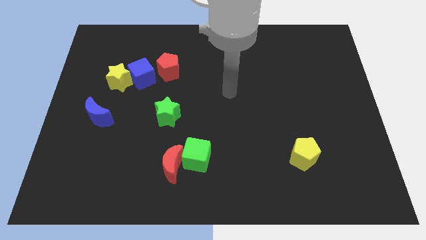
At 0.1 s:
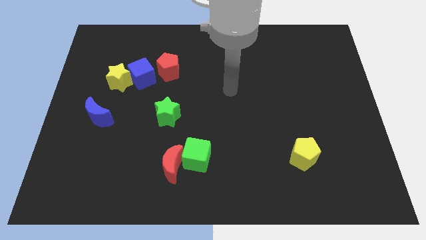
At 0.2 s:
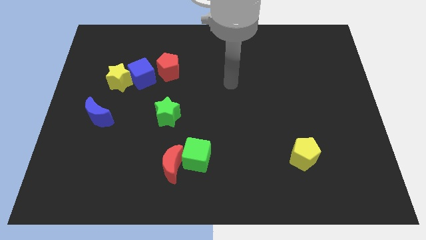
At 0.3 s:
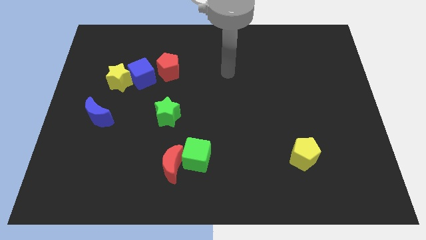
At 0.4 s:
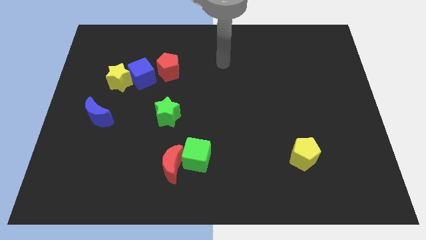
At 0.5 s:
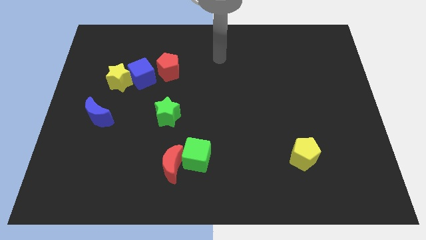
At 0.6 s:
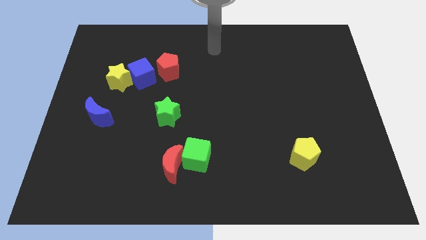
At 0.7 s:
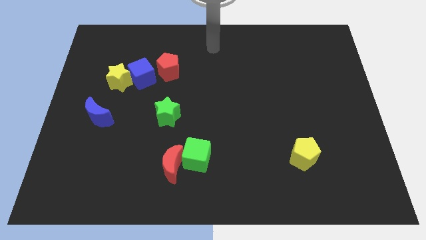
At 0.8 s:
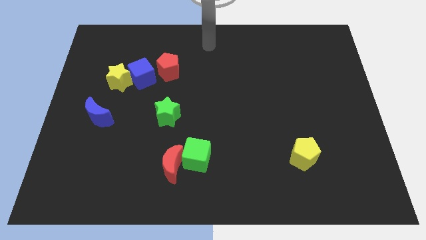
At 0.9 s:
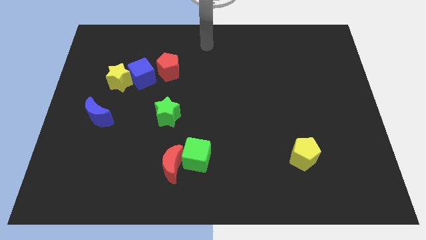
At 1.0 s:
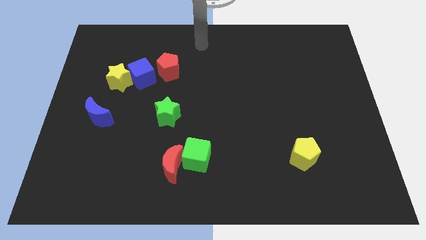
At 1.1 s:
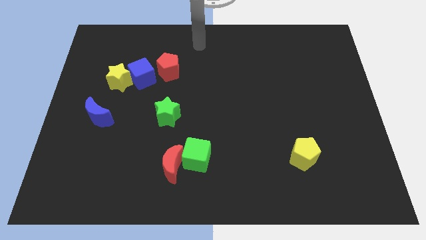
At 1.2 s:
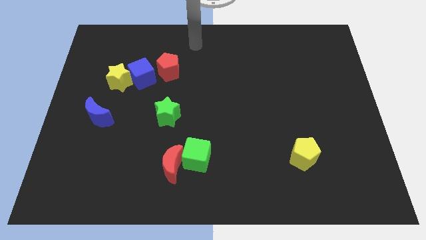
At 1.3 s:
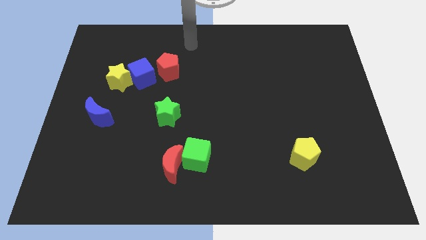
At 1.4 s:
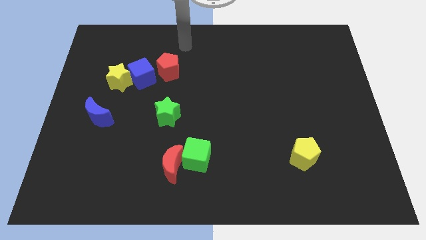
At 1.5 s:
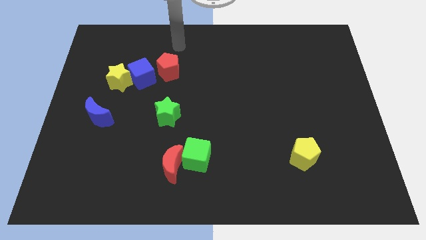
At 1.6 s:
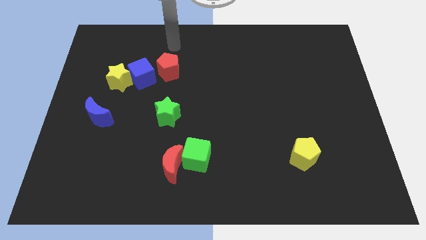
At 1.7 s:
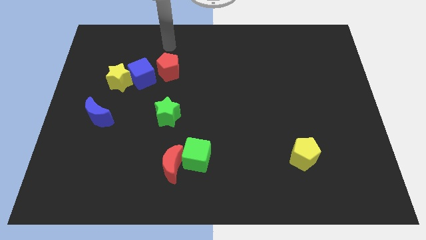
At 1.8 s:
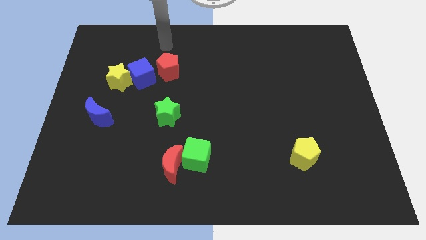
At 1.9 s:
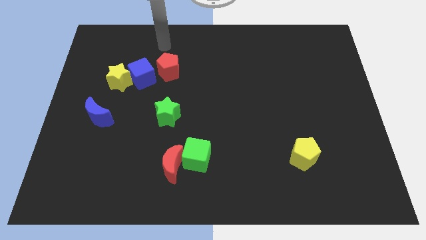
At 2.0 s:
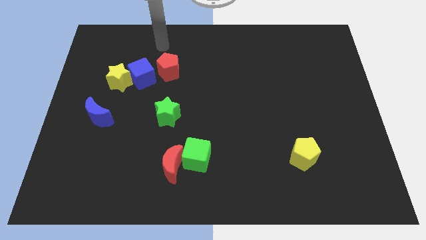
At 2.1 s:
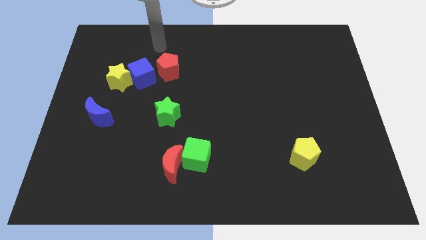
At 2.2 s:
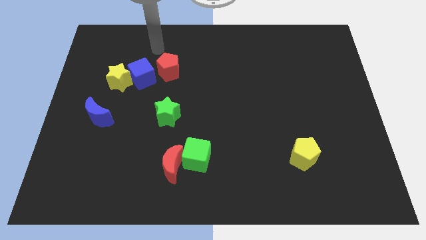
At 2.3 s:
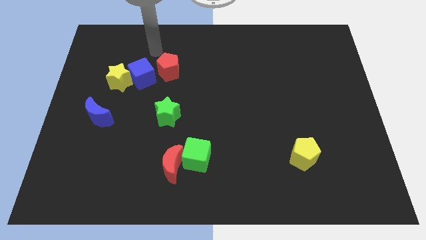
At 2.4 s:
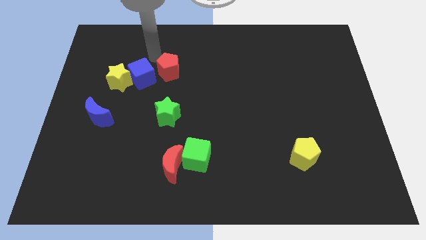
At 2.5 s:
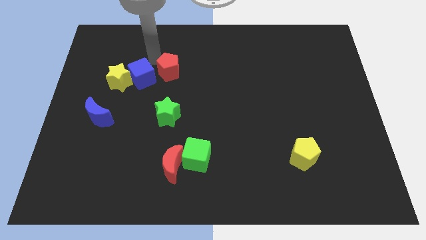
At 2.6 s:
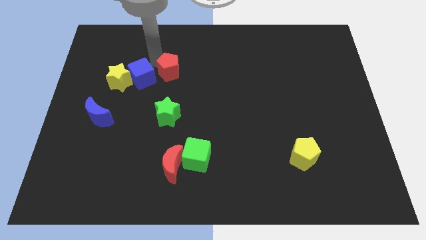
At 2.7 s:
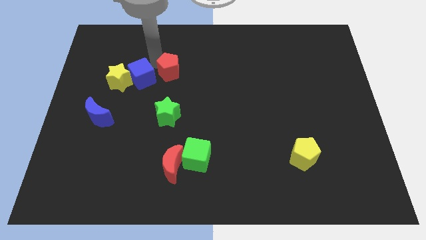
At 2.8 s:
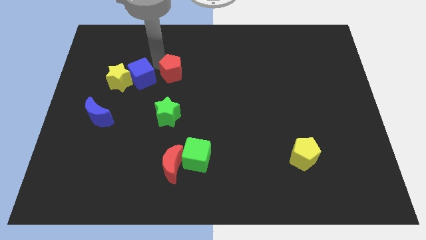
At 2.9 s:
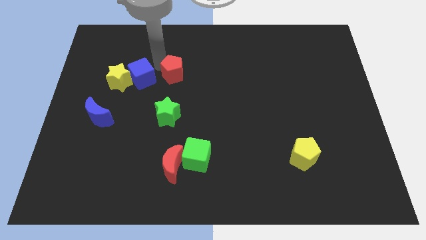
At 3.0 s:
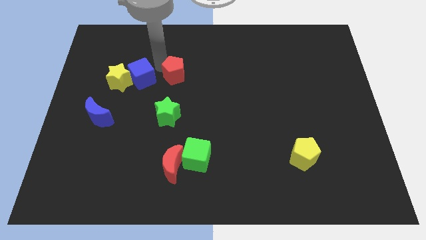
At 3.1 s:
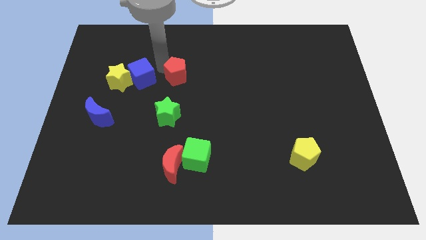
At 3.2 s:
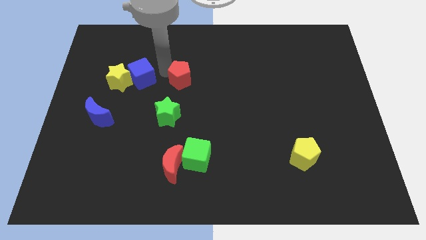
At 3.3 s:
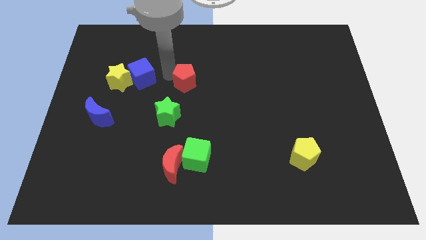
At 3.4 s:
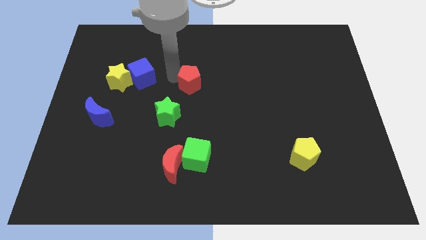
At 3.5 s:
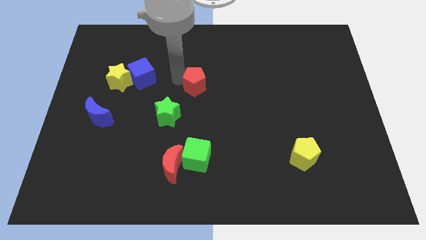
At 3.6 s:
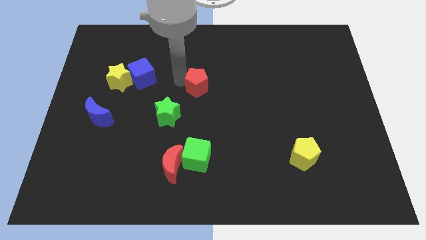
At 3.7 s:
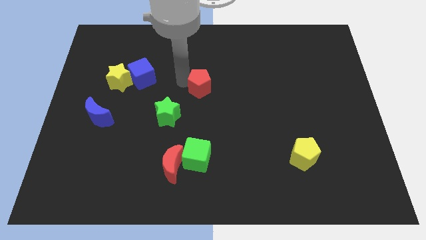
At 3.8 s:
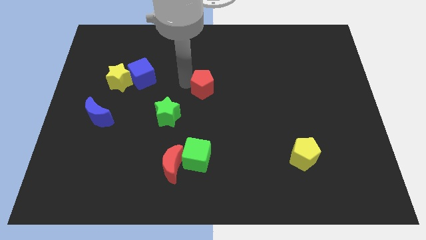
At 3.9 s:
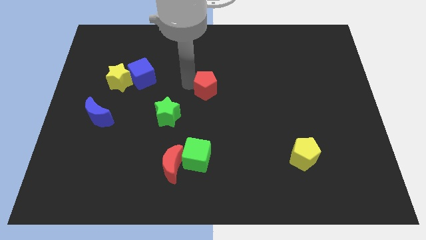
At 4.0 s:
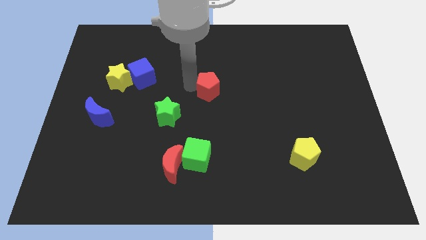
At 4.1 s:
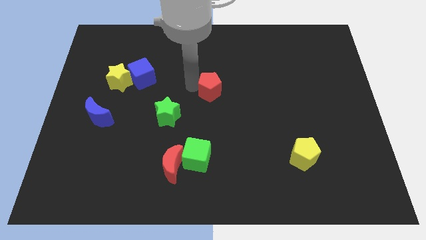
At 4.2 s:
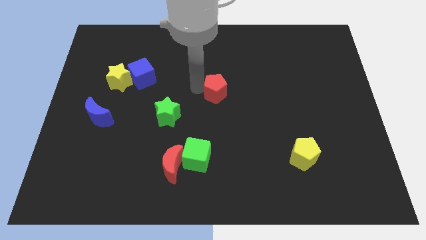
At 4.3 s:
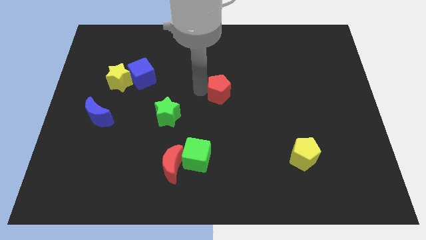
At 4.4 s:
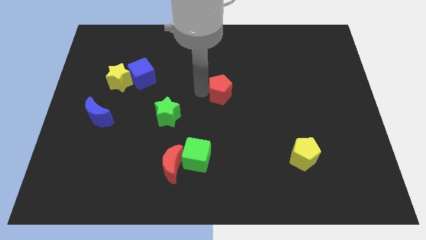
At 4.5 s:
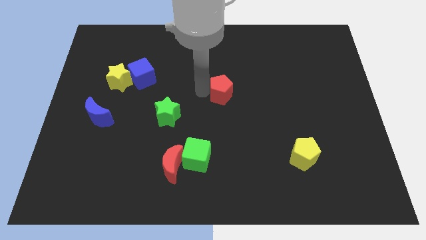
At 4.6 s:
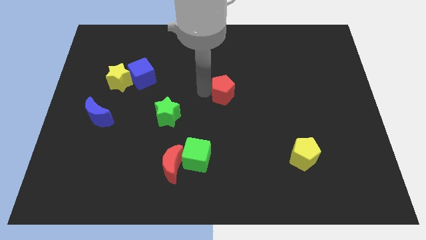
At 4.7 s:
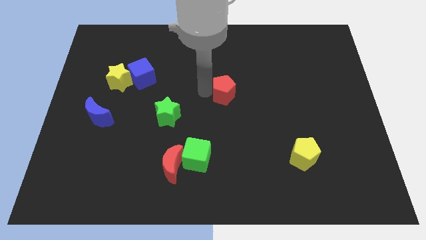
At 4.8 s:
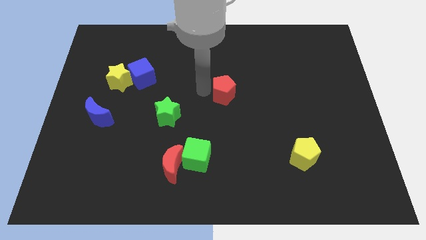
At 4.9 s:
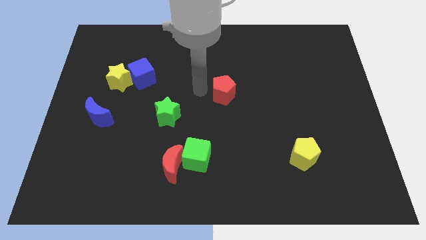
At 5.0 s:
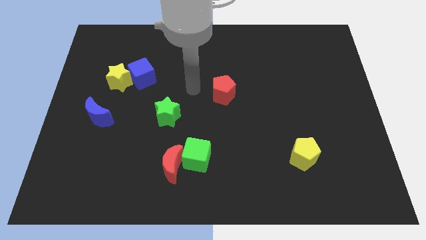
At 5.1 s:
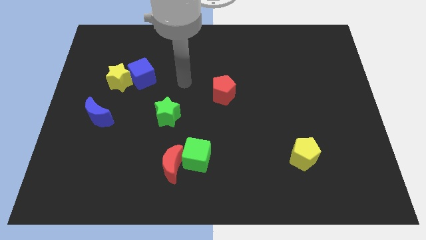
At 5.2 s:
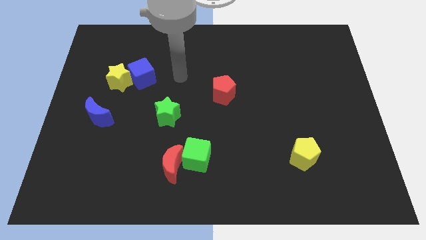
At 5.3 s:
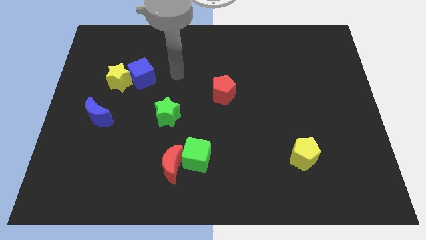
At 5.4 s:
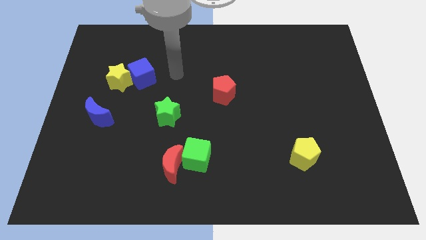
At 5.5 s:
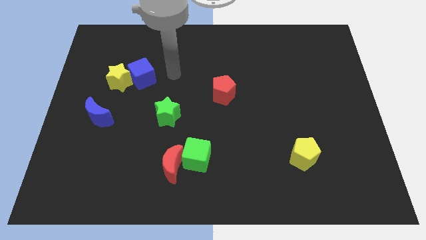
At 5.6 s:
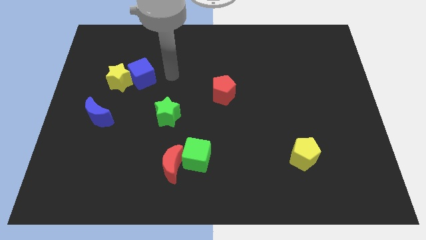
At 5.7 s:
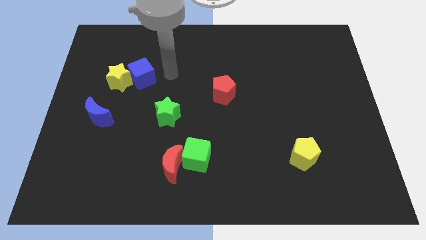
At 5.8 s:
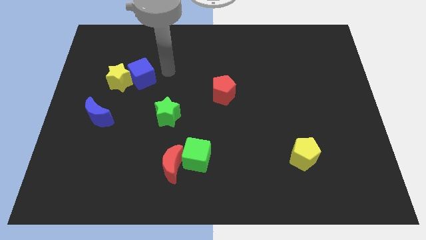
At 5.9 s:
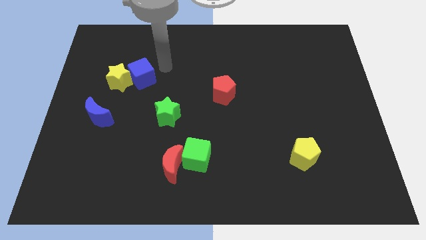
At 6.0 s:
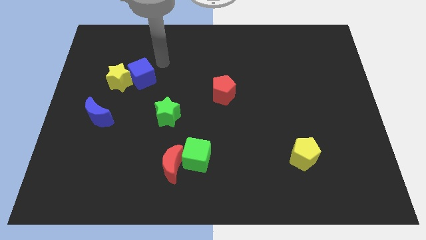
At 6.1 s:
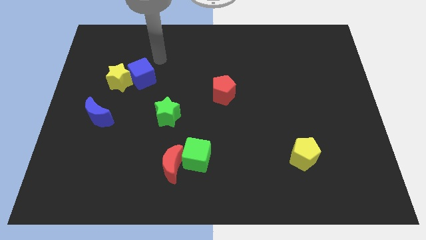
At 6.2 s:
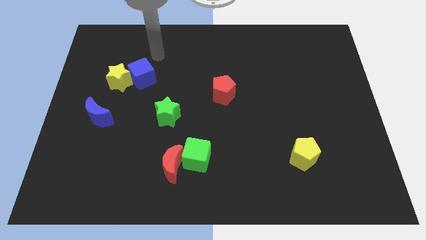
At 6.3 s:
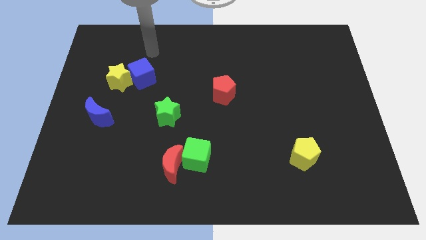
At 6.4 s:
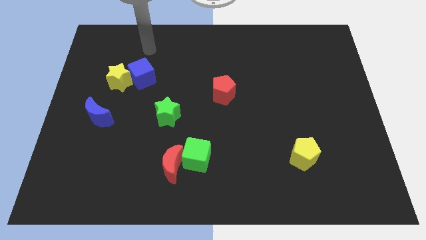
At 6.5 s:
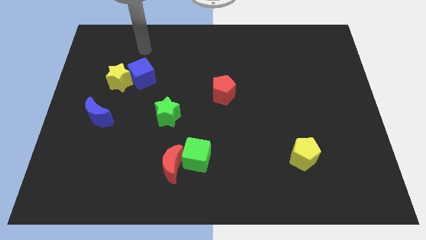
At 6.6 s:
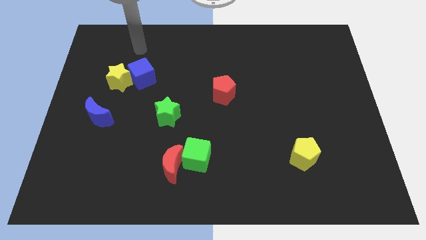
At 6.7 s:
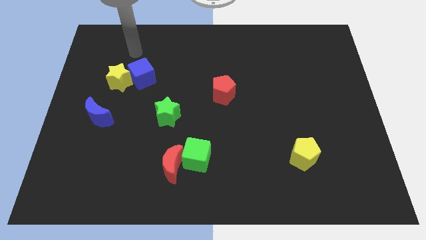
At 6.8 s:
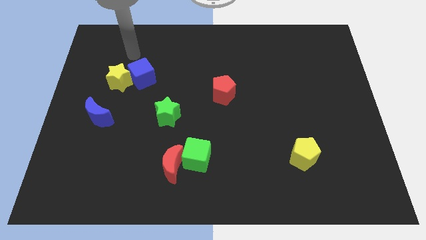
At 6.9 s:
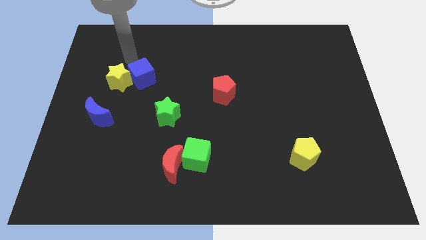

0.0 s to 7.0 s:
move the red pentagon away from the blue cube

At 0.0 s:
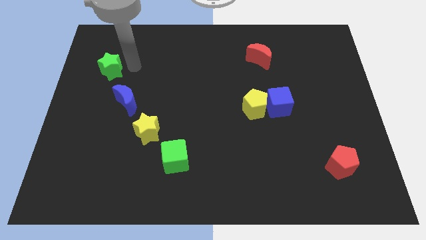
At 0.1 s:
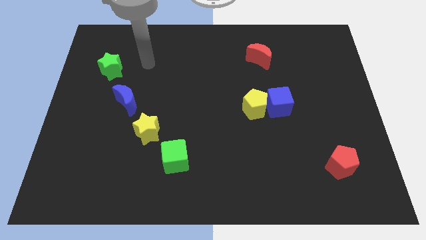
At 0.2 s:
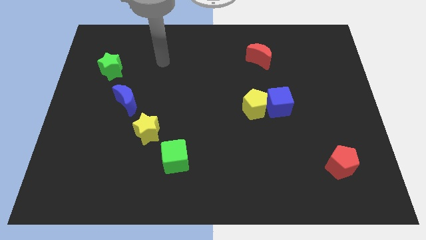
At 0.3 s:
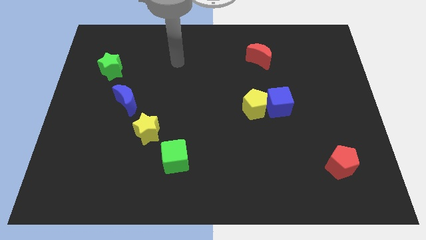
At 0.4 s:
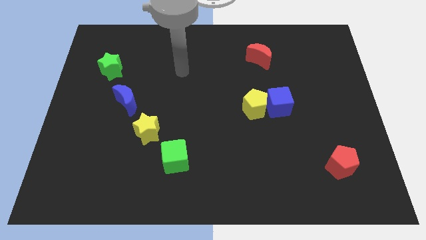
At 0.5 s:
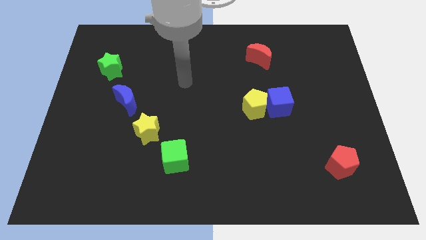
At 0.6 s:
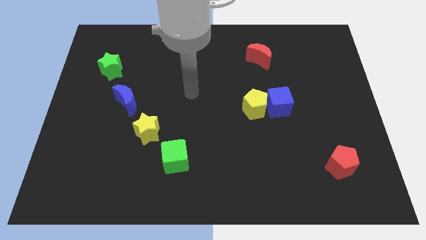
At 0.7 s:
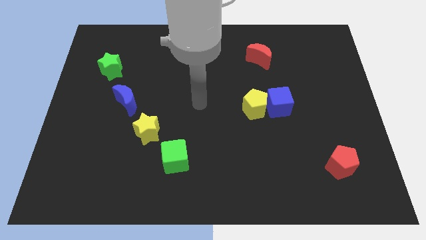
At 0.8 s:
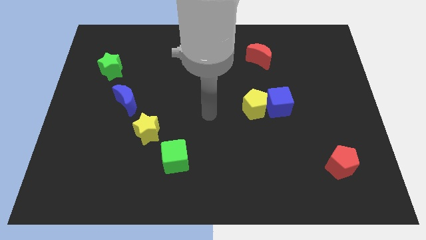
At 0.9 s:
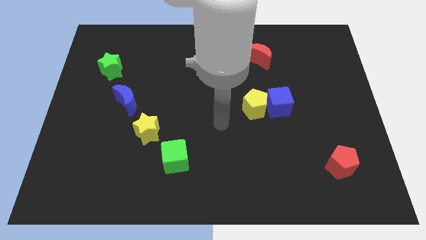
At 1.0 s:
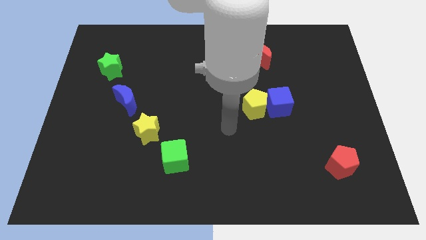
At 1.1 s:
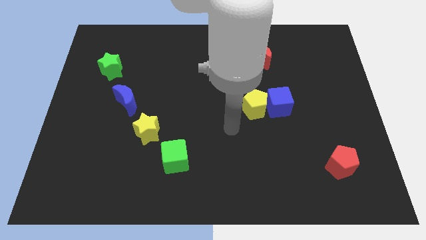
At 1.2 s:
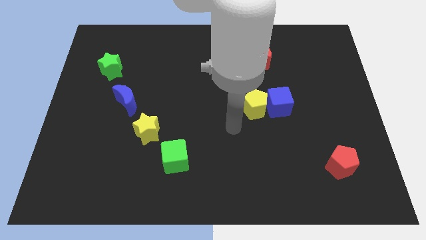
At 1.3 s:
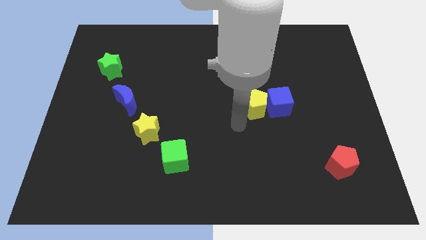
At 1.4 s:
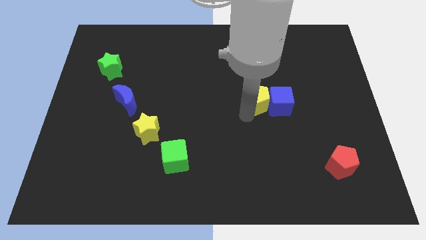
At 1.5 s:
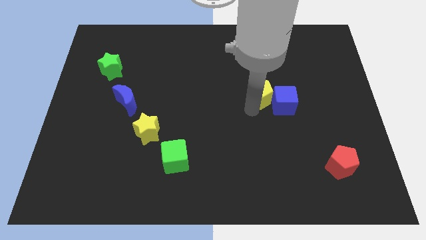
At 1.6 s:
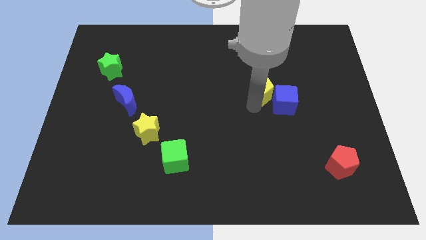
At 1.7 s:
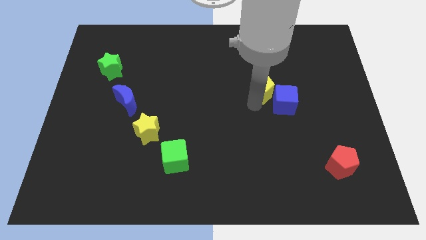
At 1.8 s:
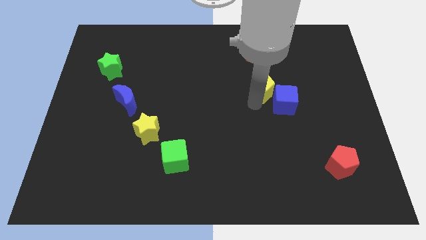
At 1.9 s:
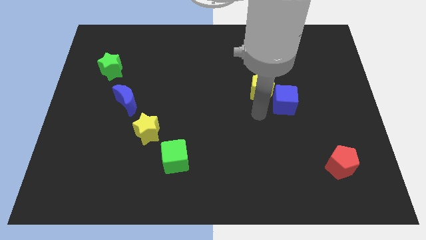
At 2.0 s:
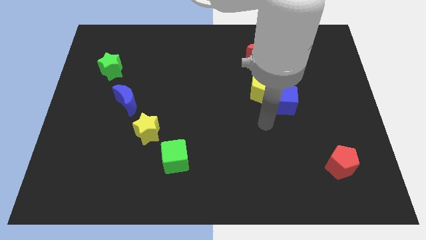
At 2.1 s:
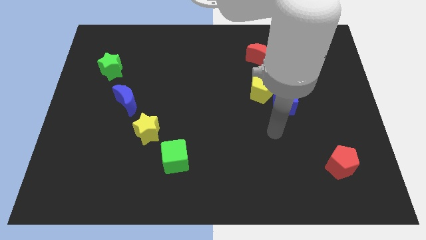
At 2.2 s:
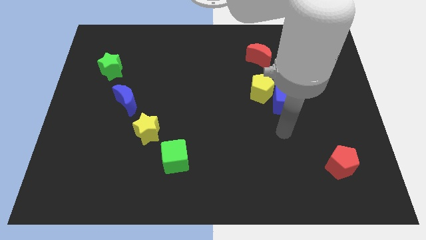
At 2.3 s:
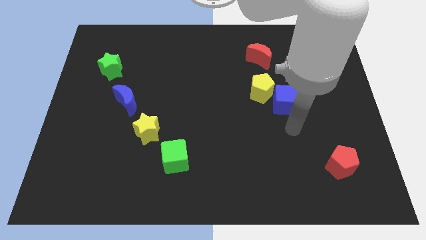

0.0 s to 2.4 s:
push the yellow pentagon to the top left of blue cube
